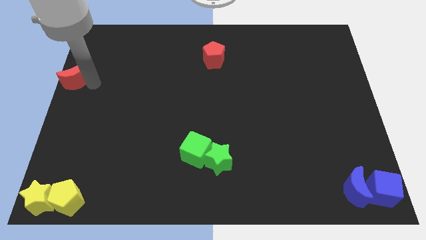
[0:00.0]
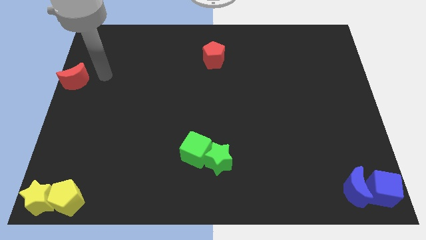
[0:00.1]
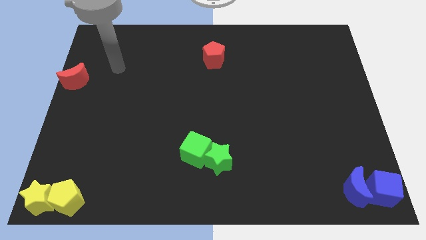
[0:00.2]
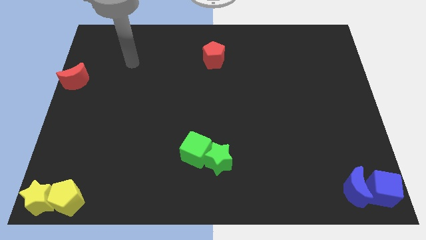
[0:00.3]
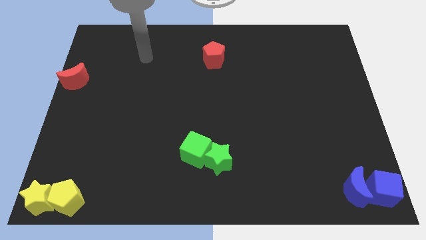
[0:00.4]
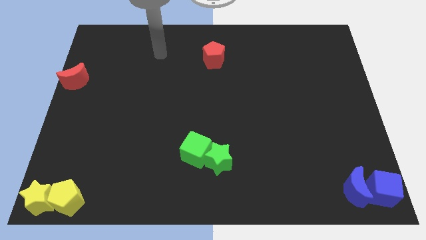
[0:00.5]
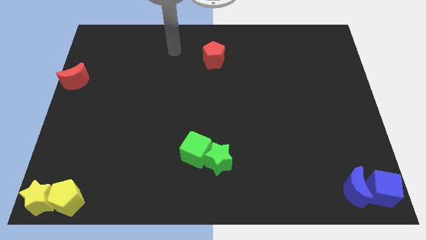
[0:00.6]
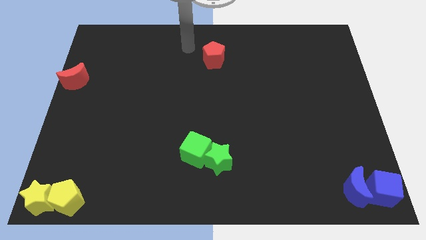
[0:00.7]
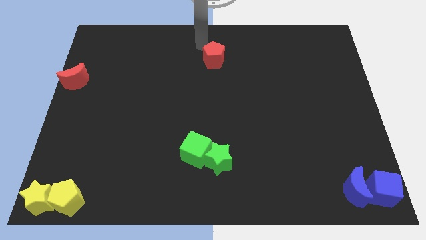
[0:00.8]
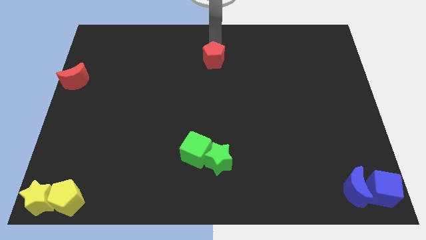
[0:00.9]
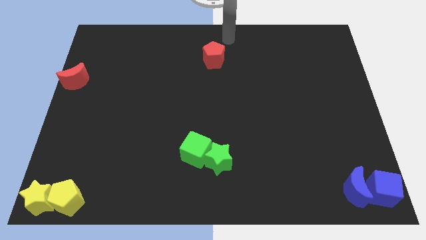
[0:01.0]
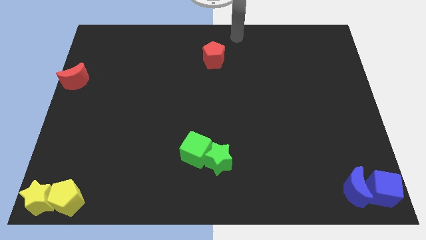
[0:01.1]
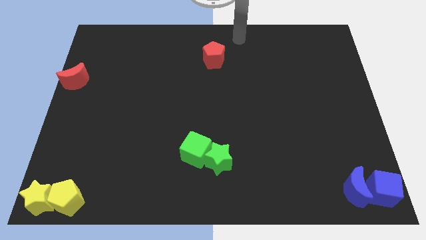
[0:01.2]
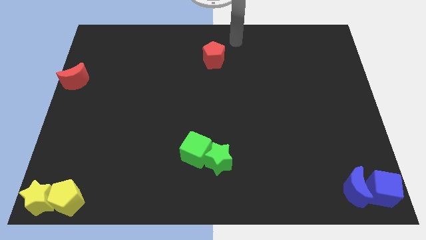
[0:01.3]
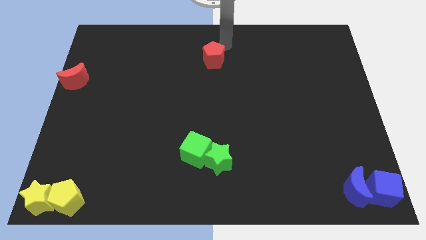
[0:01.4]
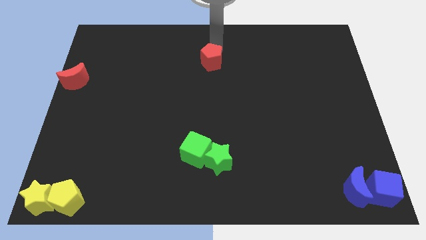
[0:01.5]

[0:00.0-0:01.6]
move the arm away from the red moon

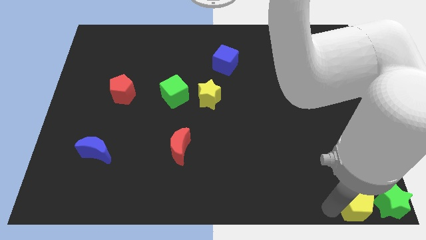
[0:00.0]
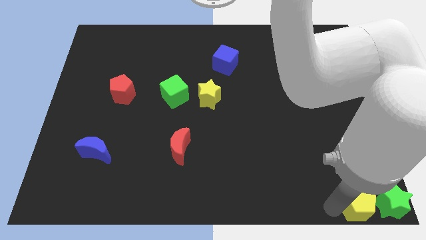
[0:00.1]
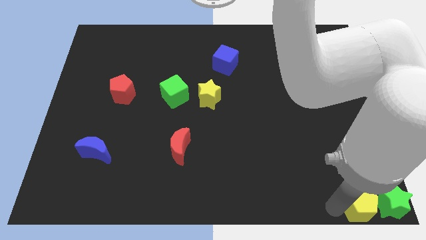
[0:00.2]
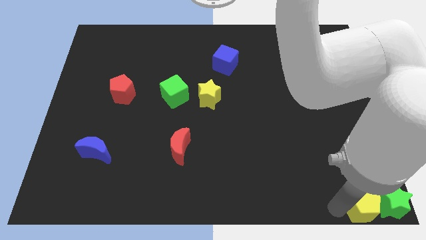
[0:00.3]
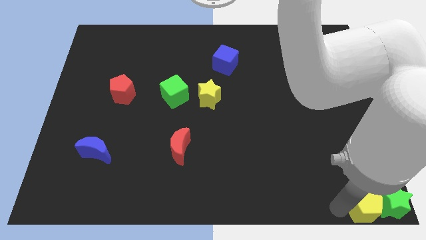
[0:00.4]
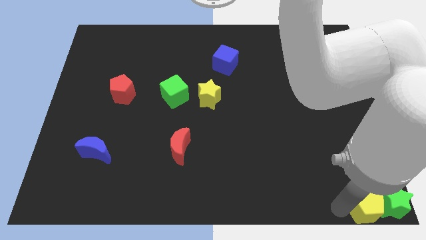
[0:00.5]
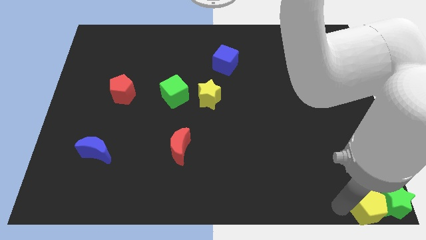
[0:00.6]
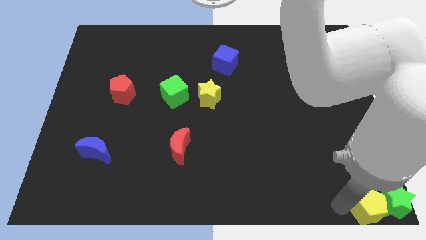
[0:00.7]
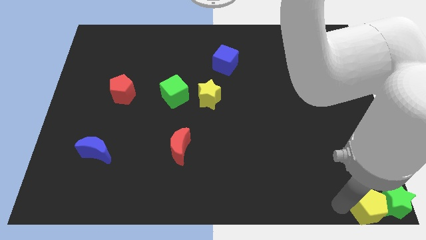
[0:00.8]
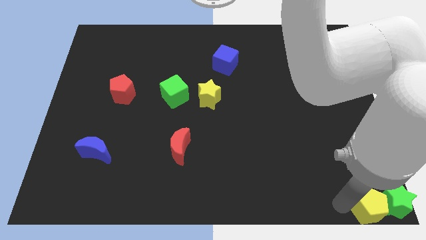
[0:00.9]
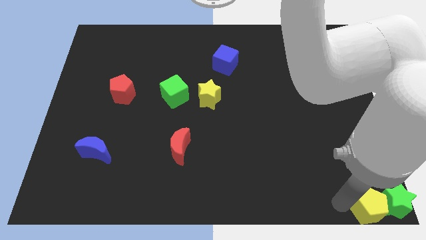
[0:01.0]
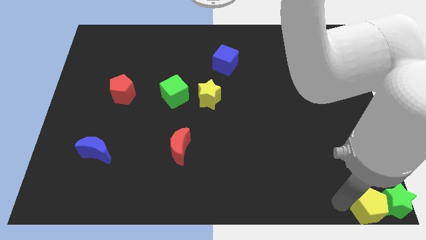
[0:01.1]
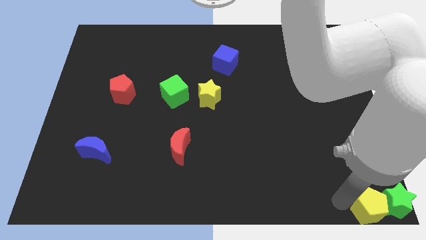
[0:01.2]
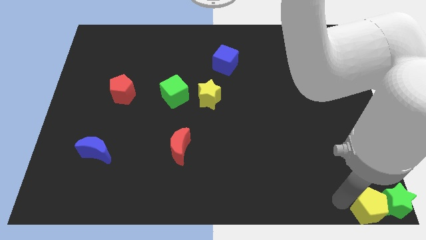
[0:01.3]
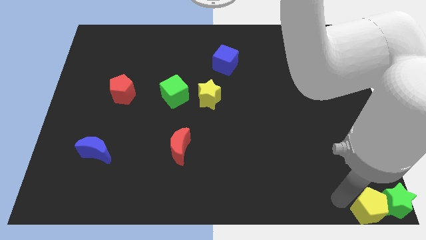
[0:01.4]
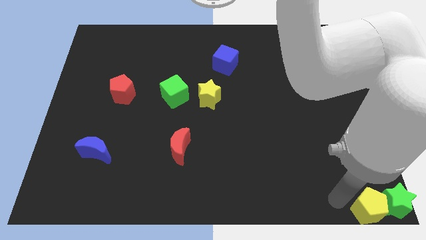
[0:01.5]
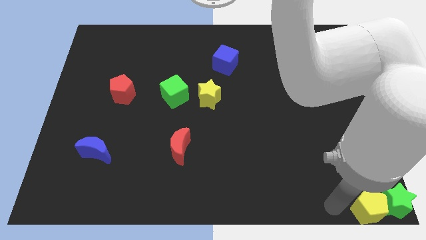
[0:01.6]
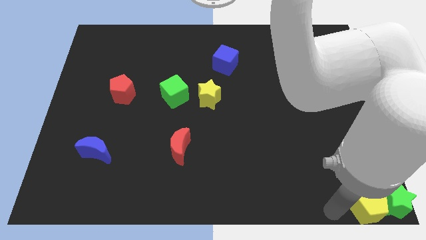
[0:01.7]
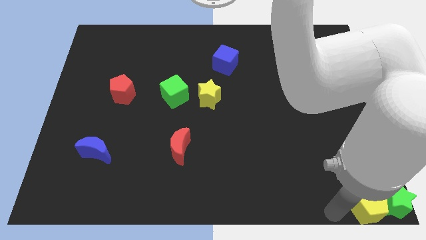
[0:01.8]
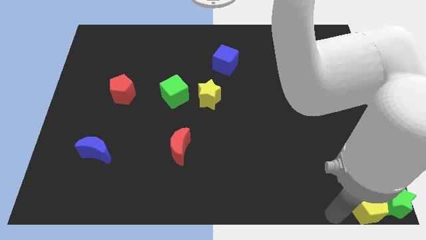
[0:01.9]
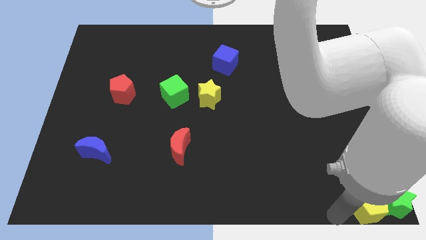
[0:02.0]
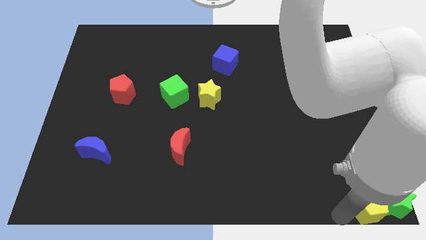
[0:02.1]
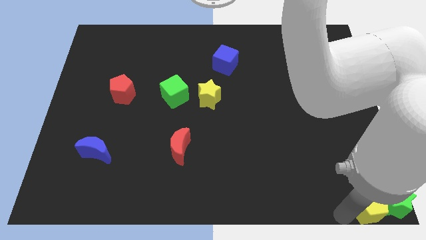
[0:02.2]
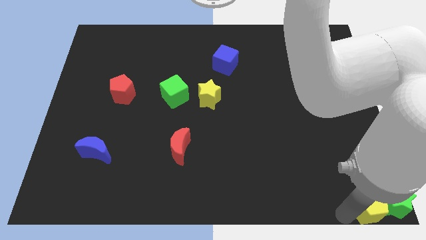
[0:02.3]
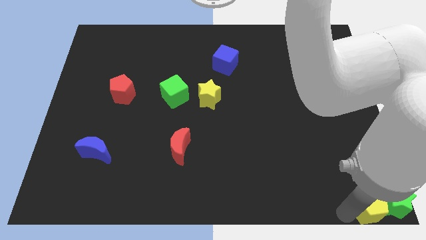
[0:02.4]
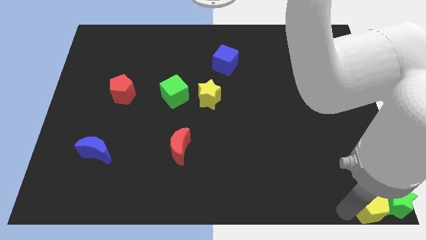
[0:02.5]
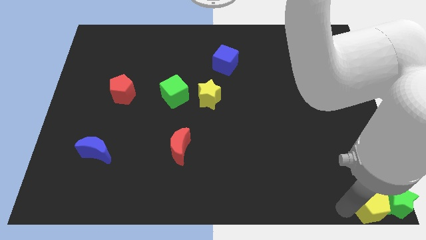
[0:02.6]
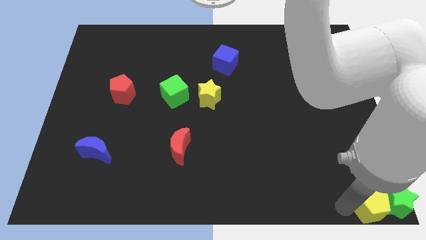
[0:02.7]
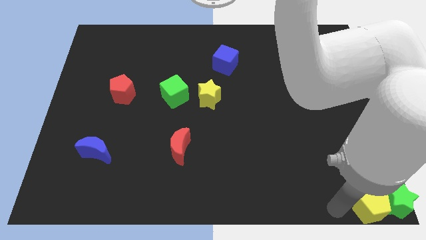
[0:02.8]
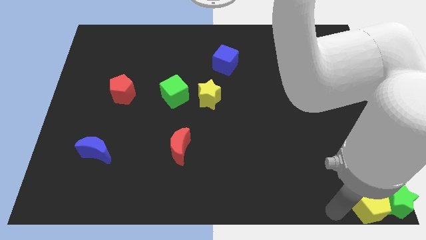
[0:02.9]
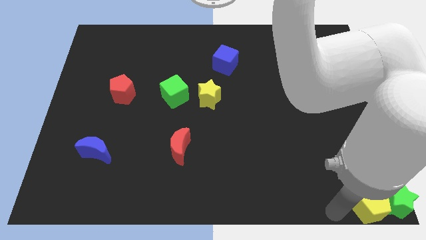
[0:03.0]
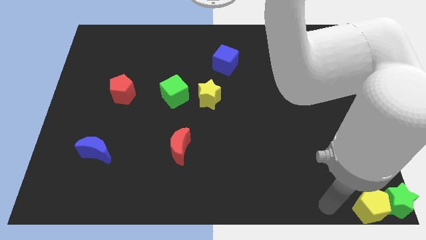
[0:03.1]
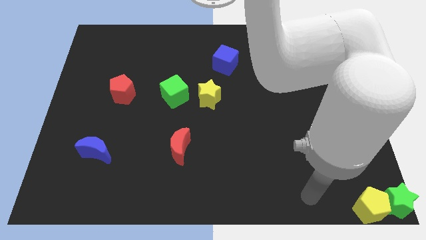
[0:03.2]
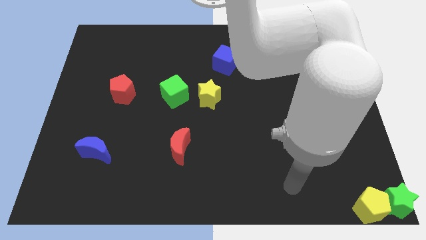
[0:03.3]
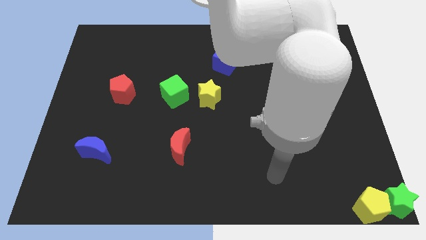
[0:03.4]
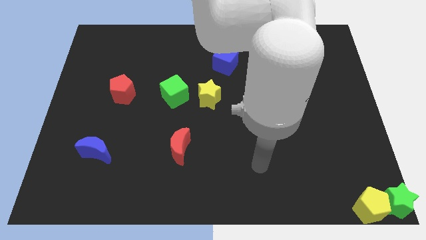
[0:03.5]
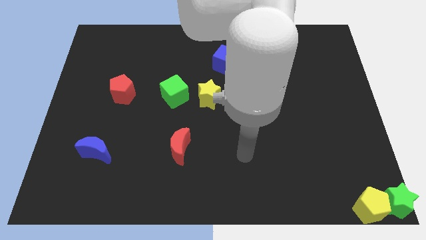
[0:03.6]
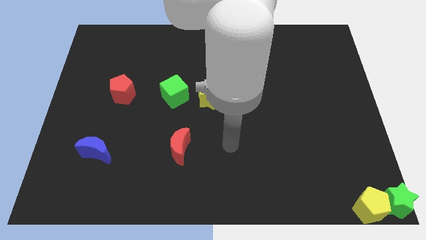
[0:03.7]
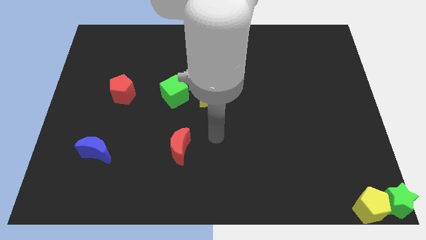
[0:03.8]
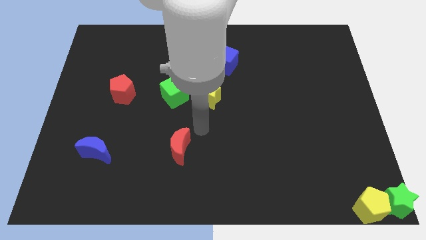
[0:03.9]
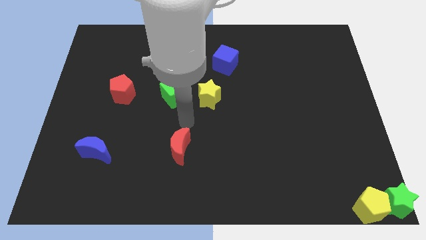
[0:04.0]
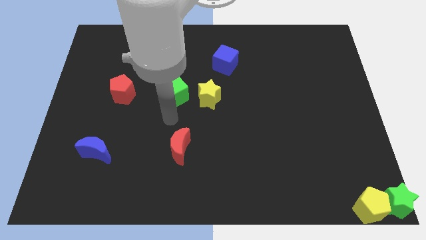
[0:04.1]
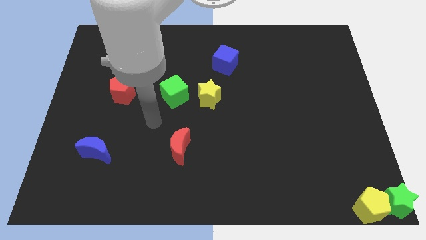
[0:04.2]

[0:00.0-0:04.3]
move the yellow pentagon into the green star

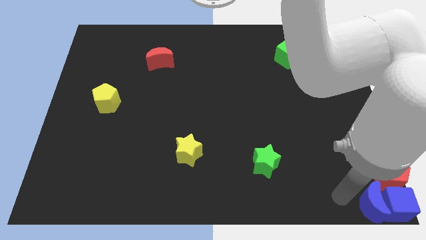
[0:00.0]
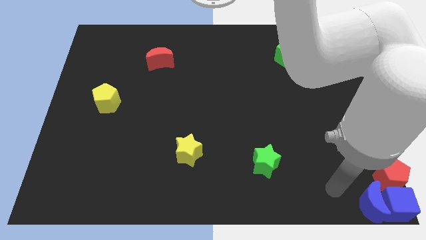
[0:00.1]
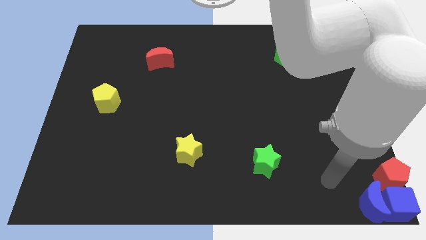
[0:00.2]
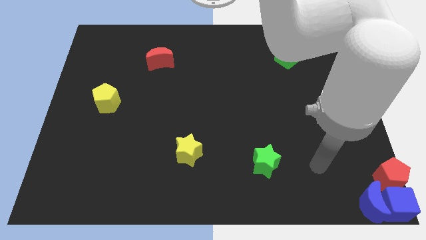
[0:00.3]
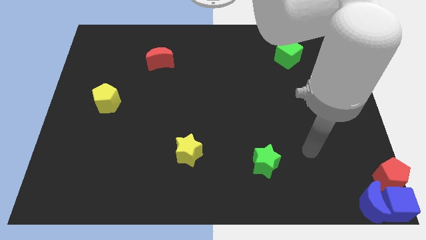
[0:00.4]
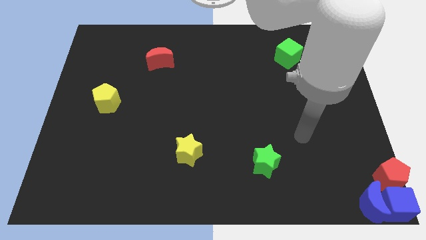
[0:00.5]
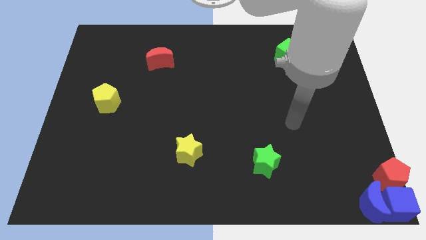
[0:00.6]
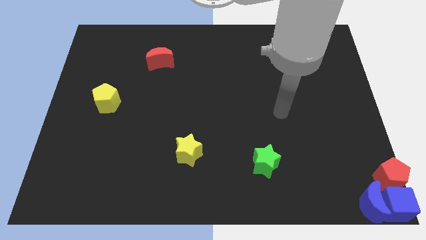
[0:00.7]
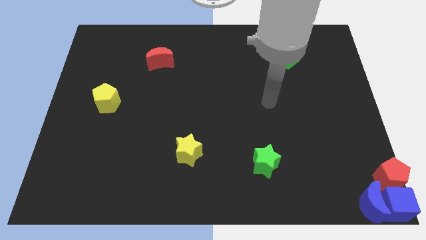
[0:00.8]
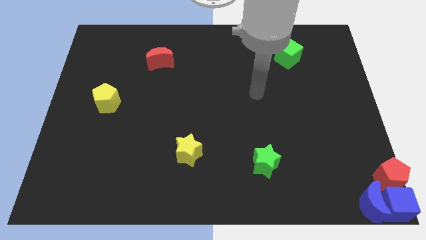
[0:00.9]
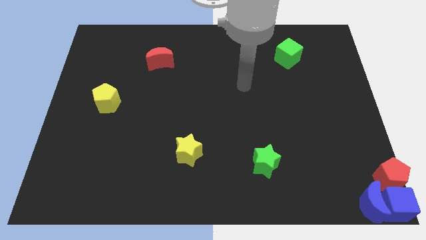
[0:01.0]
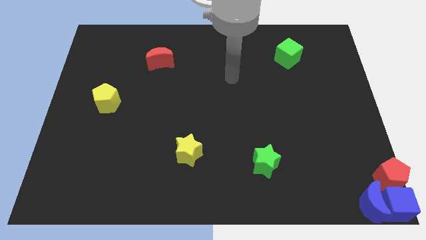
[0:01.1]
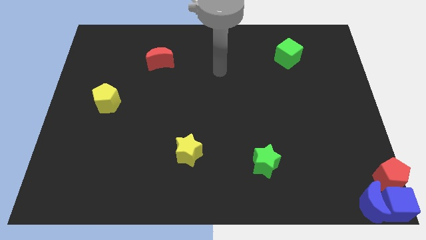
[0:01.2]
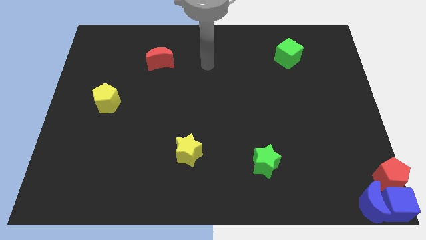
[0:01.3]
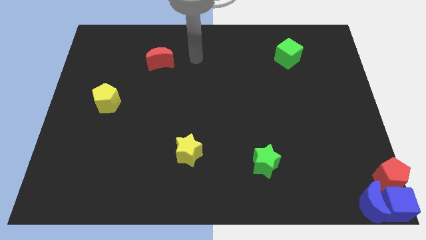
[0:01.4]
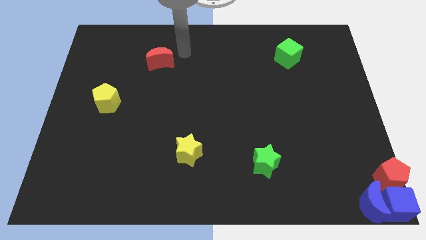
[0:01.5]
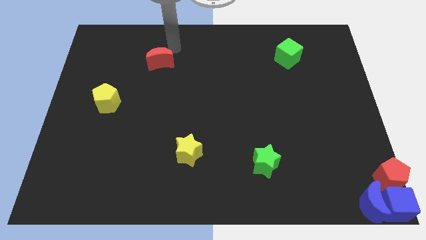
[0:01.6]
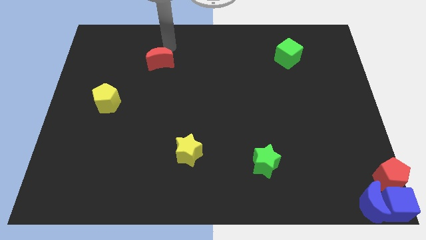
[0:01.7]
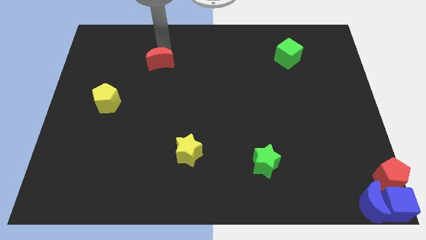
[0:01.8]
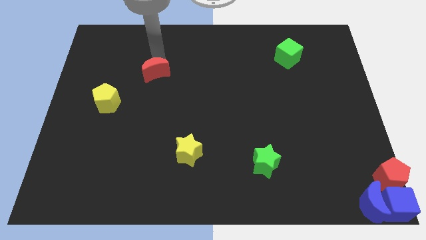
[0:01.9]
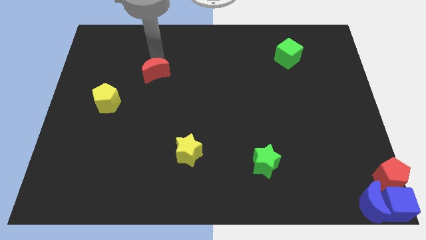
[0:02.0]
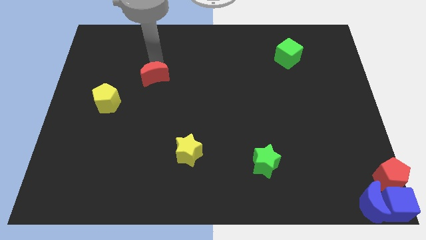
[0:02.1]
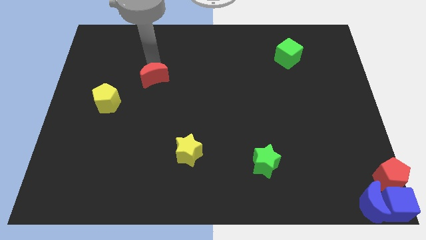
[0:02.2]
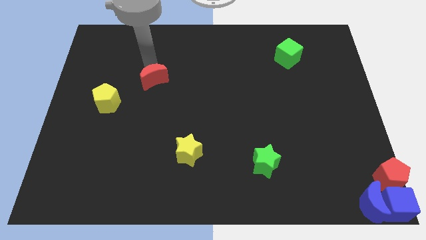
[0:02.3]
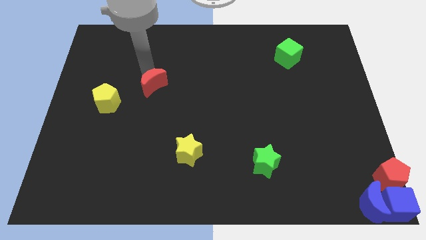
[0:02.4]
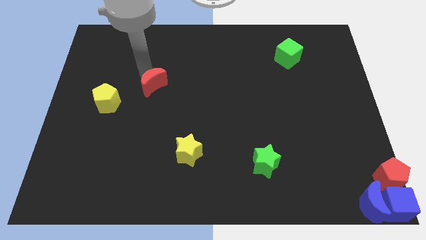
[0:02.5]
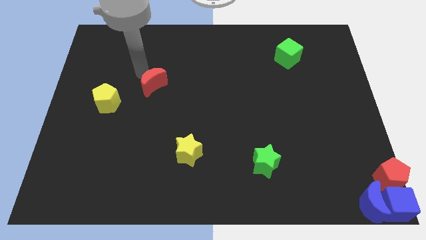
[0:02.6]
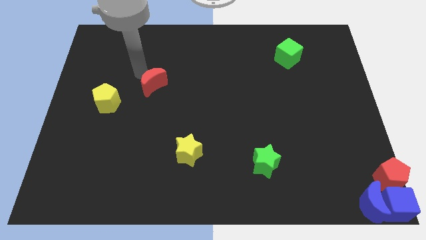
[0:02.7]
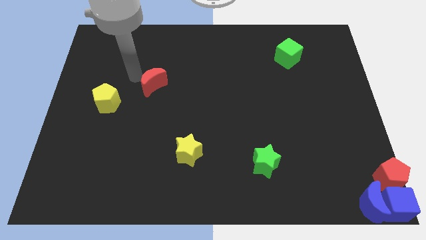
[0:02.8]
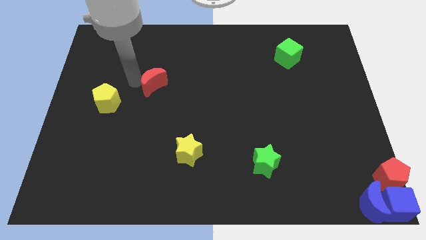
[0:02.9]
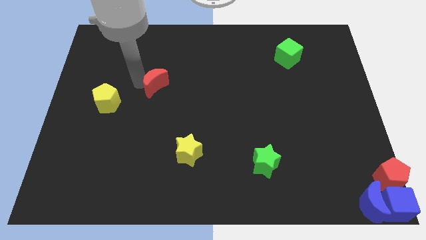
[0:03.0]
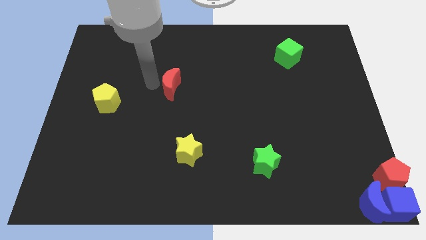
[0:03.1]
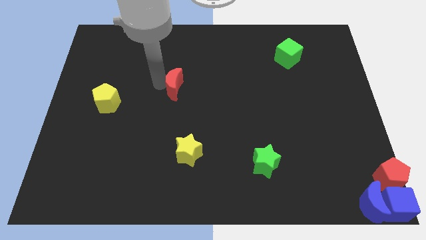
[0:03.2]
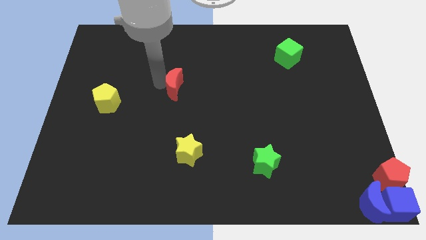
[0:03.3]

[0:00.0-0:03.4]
push the red crescent towards the right side of the board
